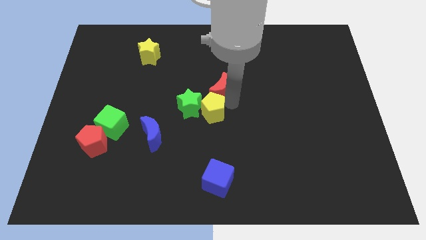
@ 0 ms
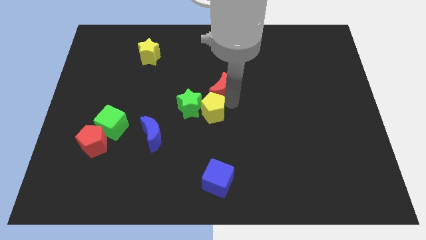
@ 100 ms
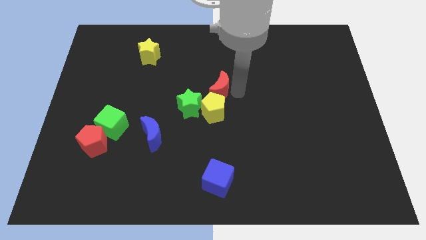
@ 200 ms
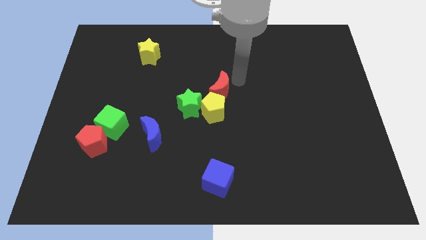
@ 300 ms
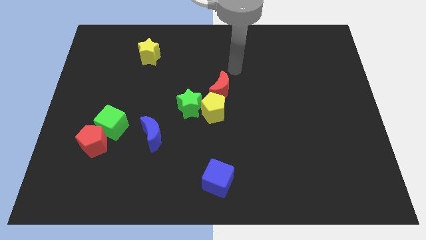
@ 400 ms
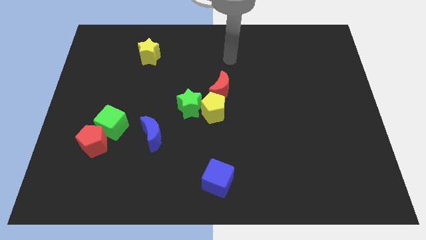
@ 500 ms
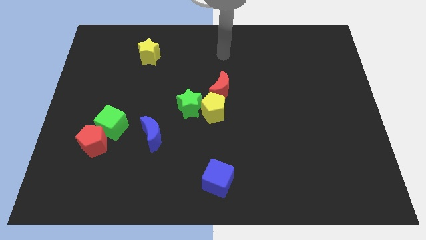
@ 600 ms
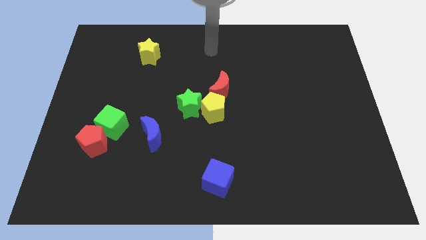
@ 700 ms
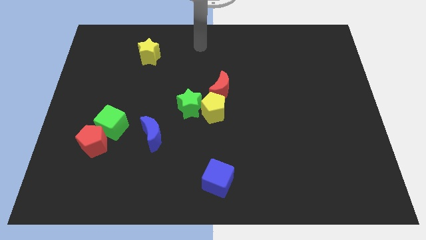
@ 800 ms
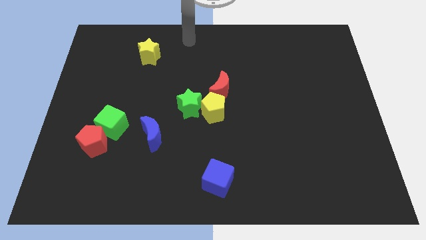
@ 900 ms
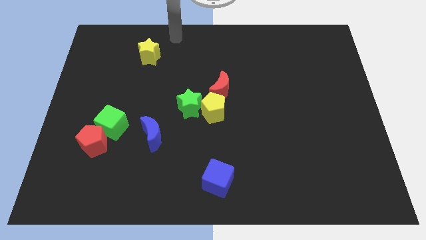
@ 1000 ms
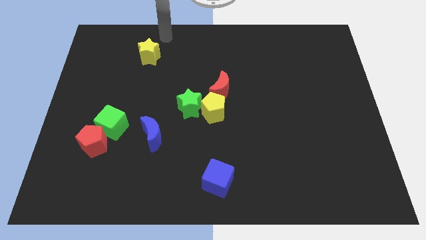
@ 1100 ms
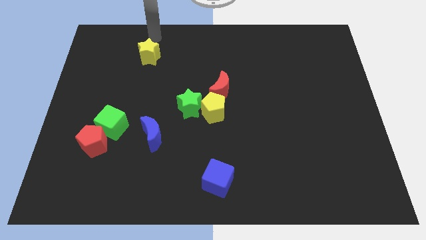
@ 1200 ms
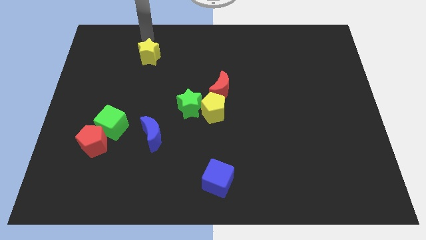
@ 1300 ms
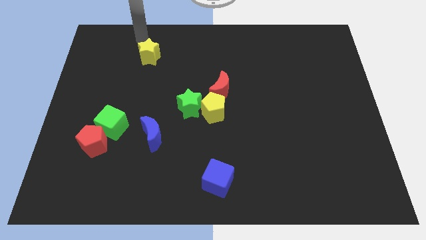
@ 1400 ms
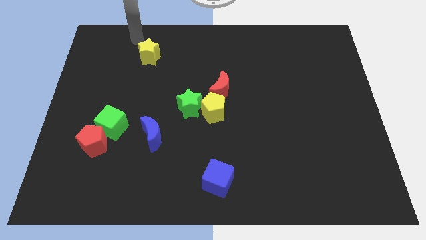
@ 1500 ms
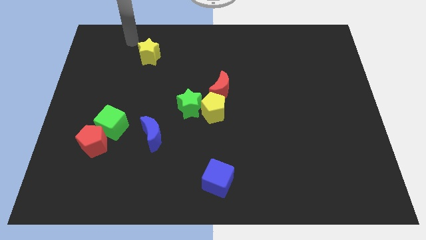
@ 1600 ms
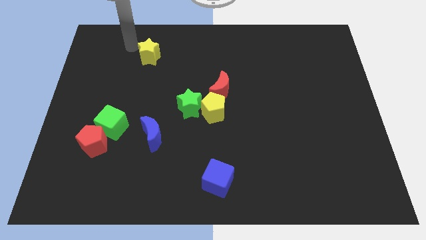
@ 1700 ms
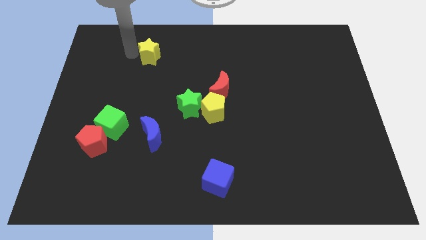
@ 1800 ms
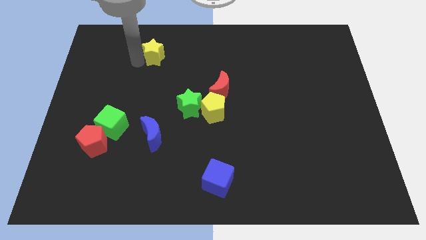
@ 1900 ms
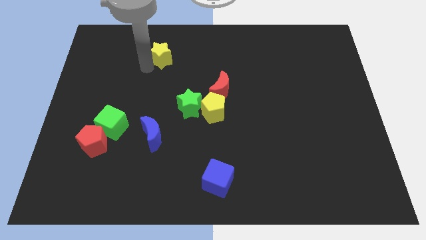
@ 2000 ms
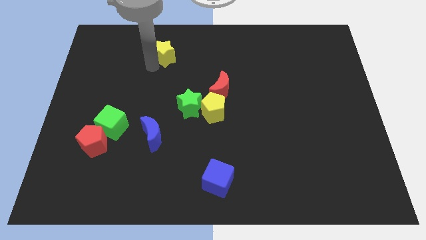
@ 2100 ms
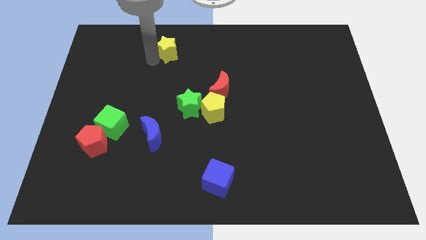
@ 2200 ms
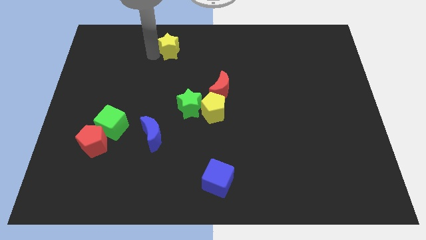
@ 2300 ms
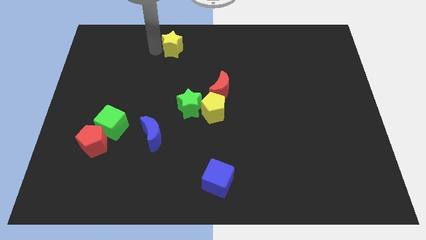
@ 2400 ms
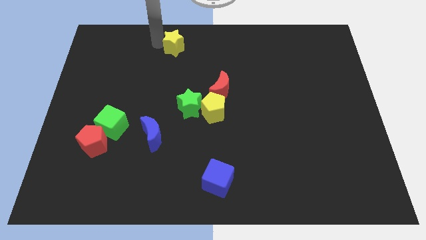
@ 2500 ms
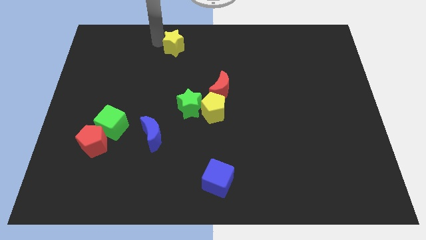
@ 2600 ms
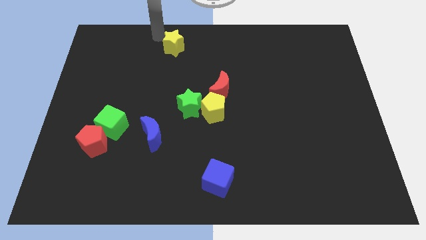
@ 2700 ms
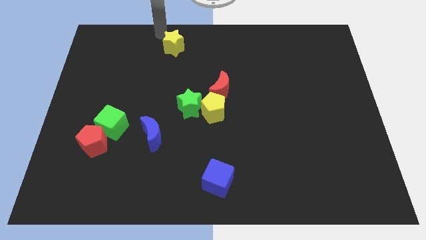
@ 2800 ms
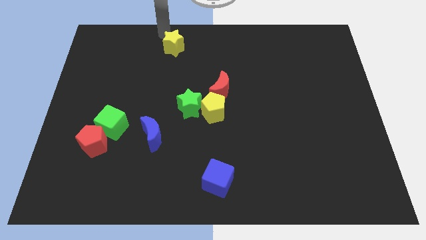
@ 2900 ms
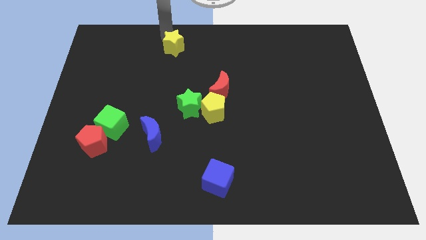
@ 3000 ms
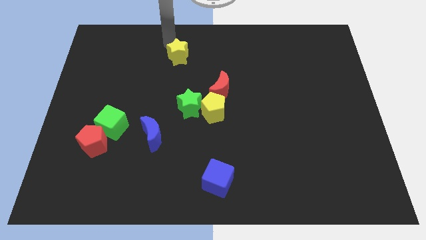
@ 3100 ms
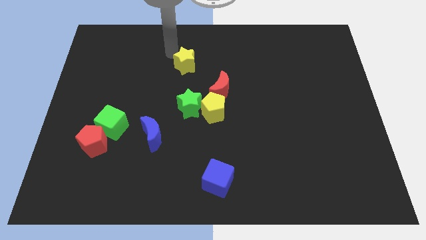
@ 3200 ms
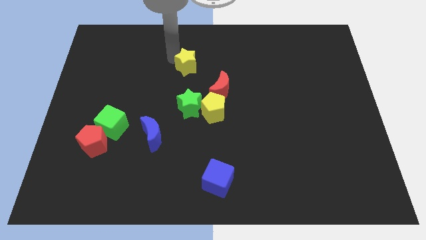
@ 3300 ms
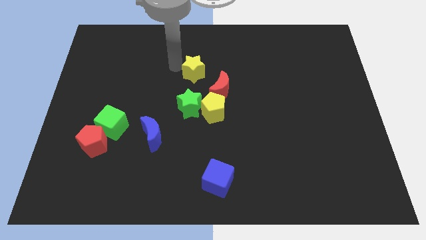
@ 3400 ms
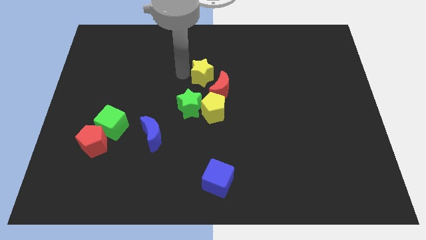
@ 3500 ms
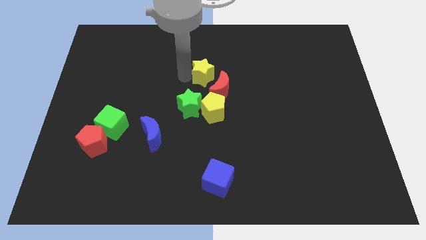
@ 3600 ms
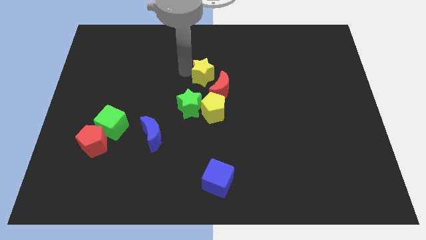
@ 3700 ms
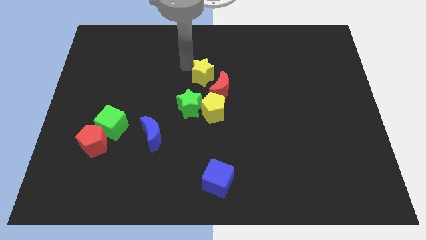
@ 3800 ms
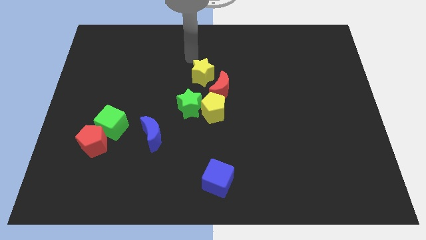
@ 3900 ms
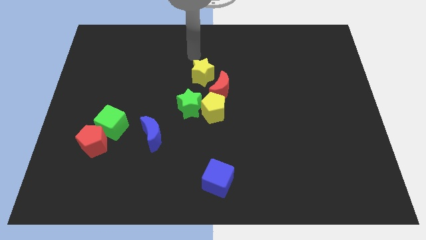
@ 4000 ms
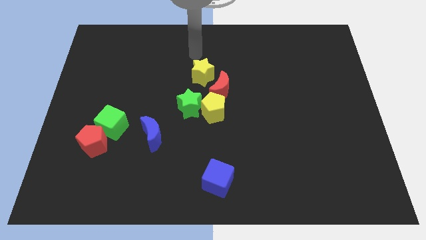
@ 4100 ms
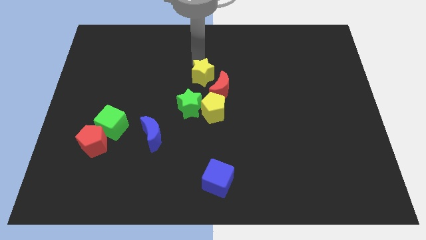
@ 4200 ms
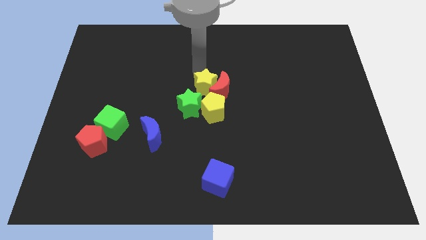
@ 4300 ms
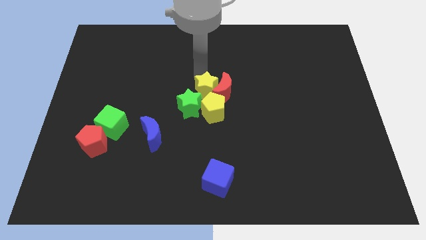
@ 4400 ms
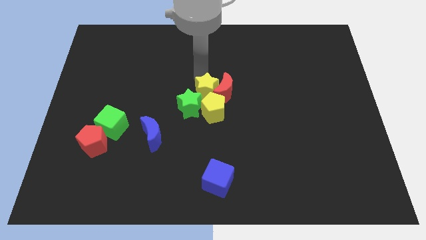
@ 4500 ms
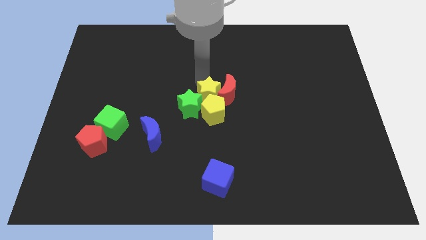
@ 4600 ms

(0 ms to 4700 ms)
move the yellow star into the group of blocks

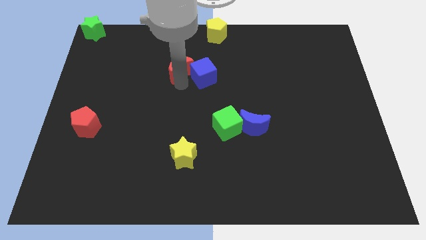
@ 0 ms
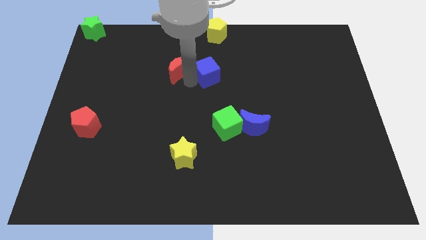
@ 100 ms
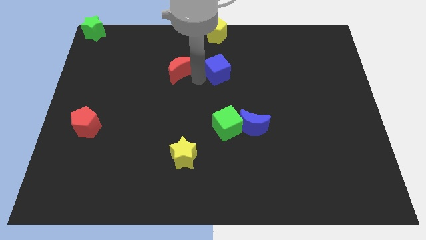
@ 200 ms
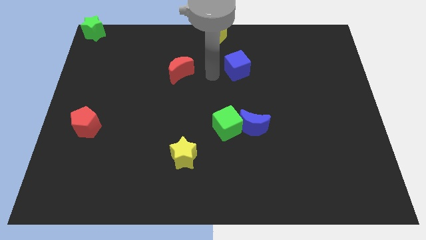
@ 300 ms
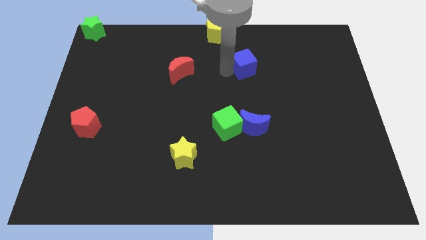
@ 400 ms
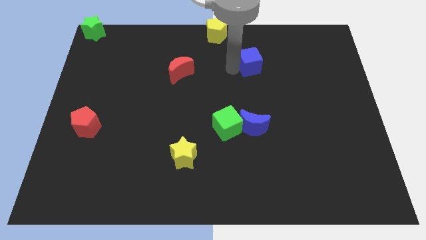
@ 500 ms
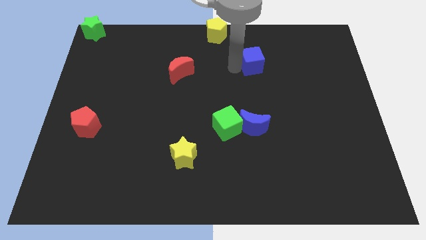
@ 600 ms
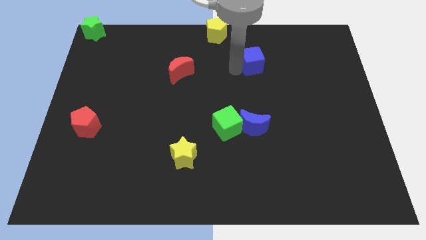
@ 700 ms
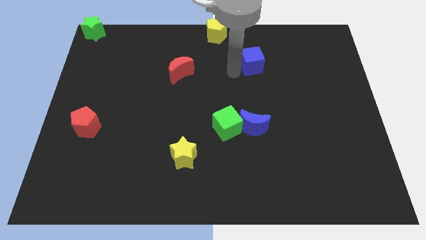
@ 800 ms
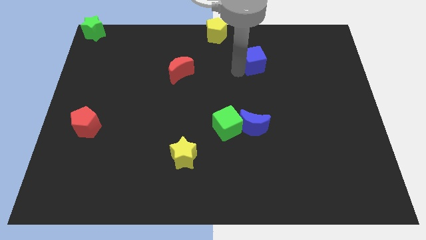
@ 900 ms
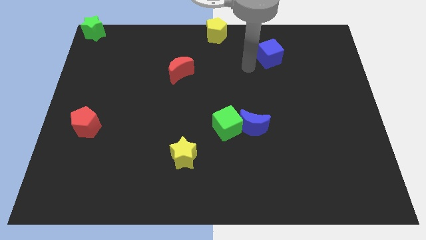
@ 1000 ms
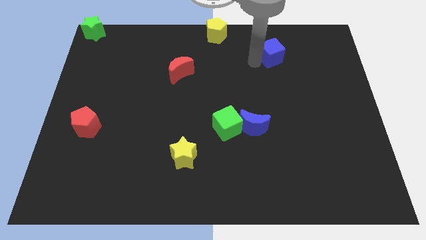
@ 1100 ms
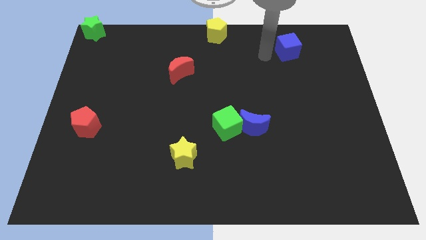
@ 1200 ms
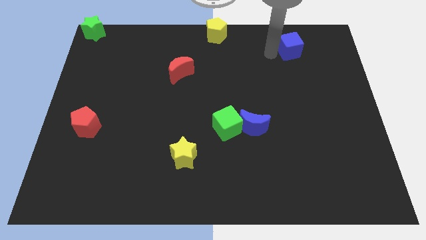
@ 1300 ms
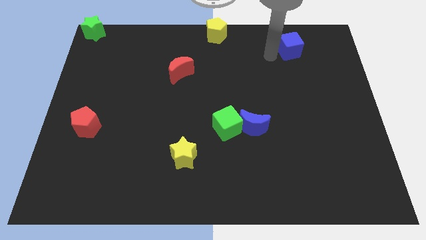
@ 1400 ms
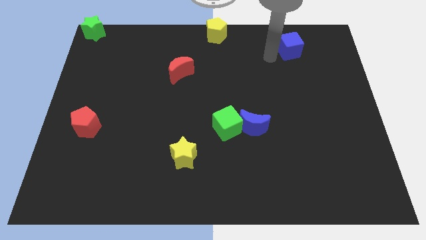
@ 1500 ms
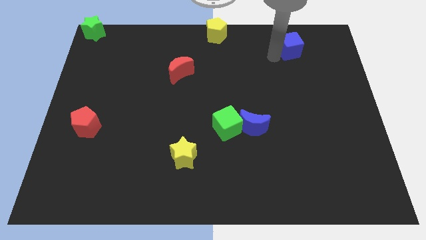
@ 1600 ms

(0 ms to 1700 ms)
separate blue cube from red crescent

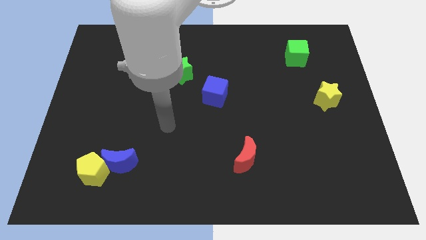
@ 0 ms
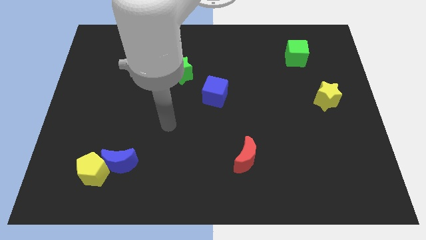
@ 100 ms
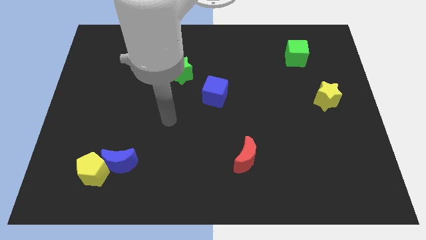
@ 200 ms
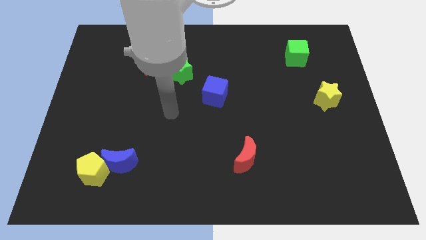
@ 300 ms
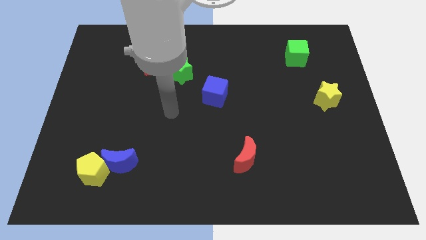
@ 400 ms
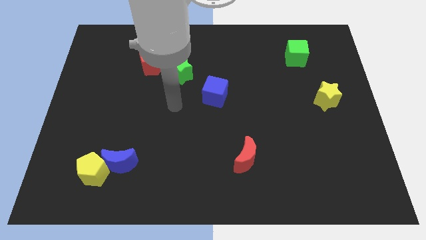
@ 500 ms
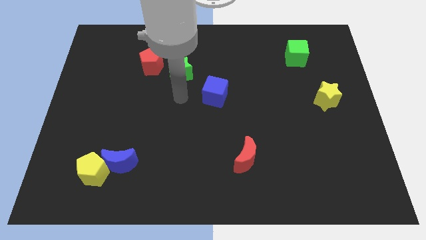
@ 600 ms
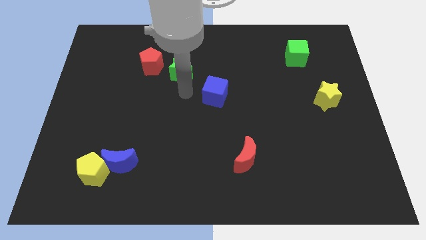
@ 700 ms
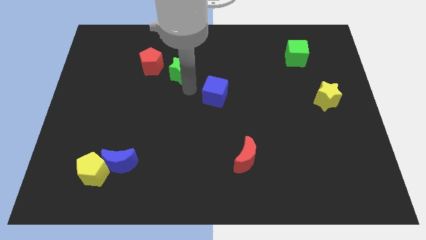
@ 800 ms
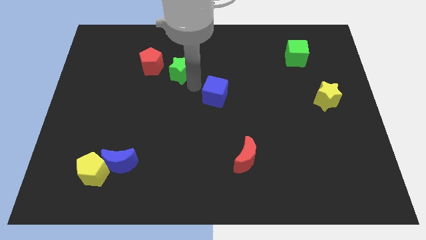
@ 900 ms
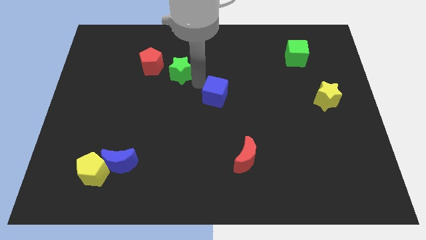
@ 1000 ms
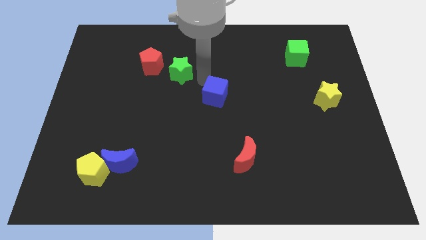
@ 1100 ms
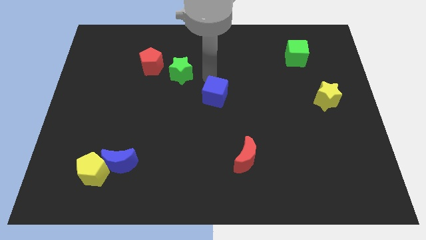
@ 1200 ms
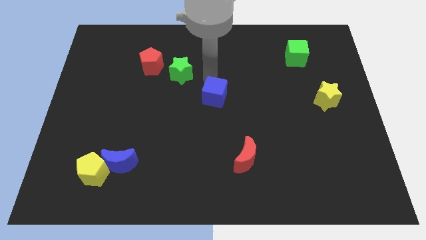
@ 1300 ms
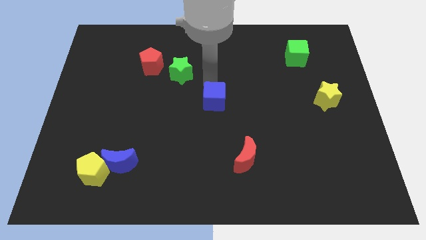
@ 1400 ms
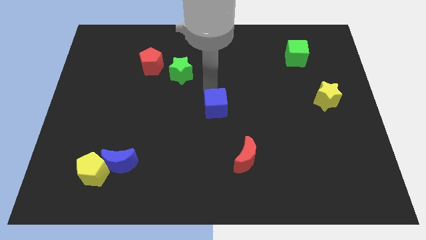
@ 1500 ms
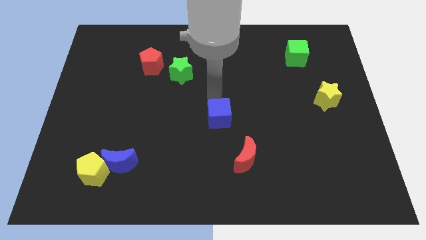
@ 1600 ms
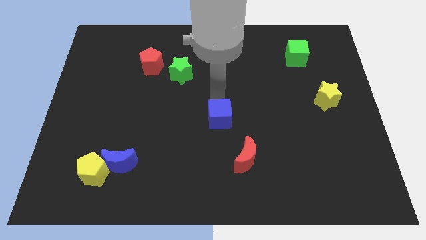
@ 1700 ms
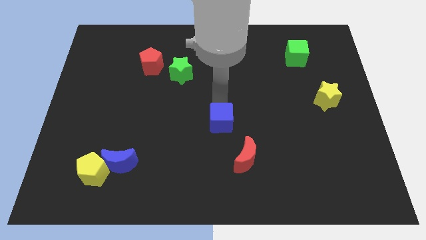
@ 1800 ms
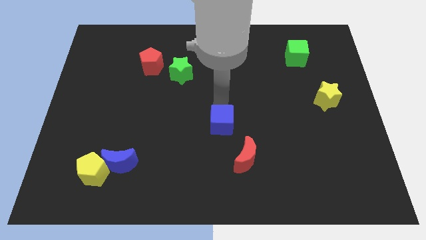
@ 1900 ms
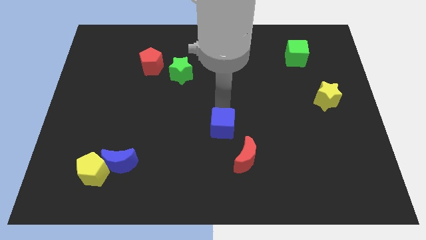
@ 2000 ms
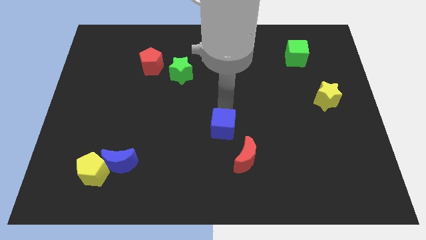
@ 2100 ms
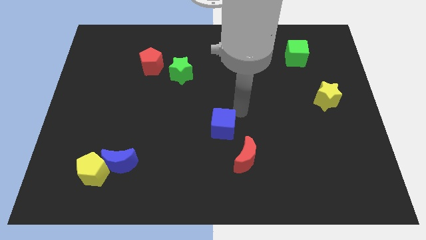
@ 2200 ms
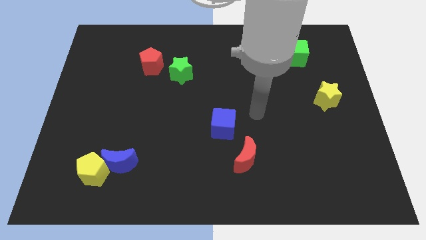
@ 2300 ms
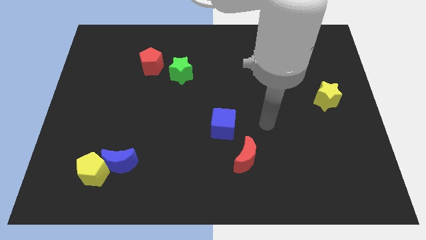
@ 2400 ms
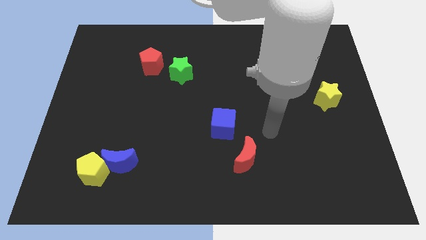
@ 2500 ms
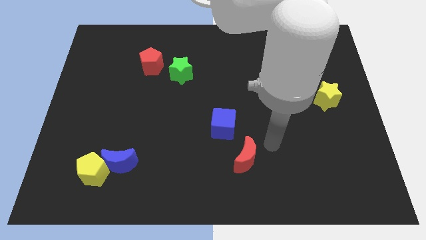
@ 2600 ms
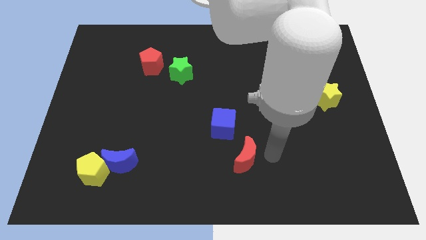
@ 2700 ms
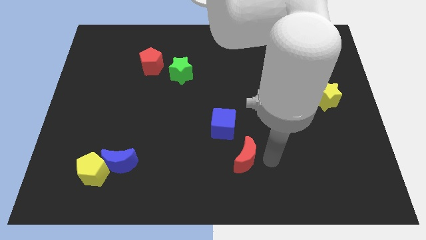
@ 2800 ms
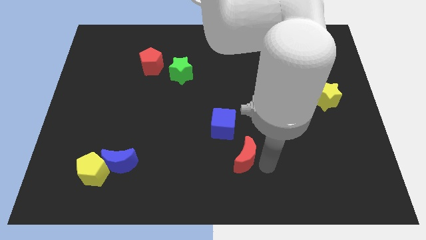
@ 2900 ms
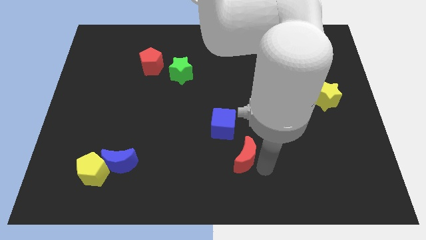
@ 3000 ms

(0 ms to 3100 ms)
push the blue cube towards the bottom side of the board
